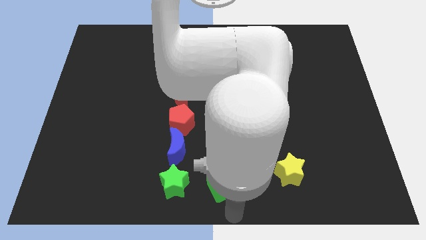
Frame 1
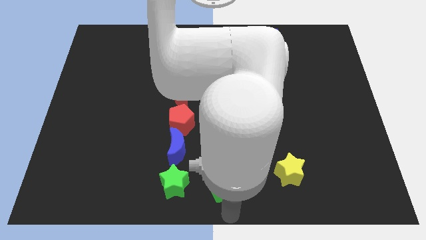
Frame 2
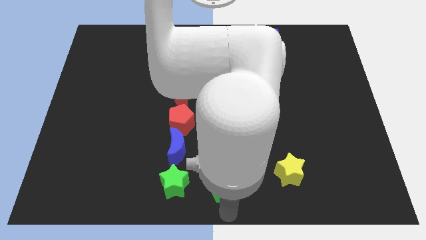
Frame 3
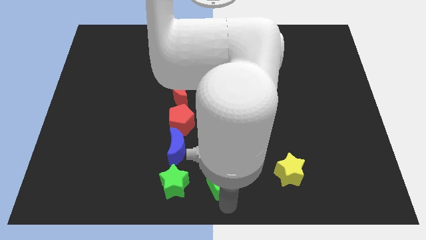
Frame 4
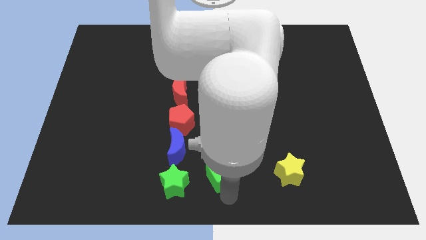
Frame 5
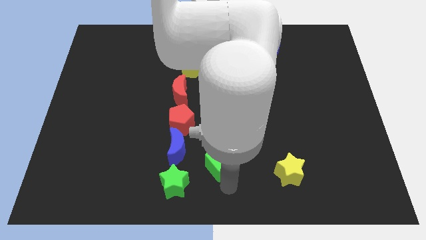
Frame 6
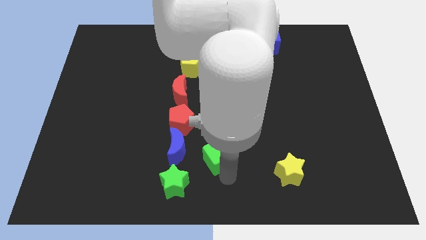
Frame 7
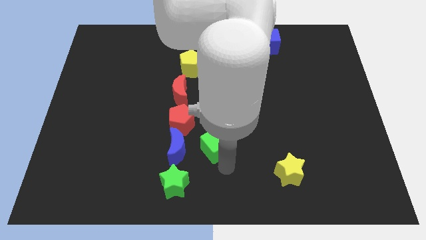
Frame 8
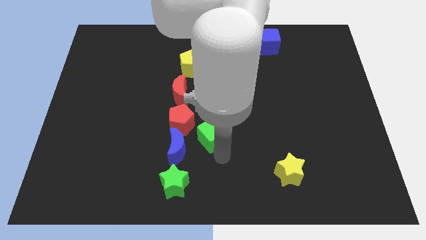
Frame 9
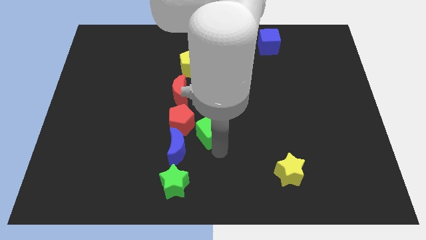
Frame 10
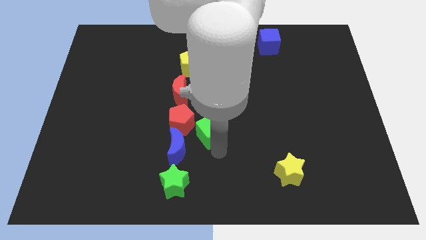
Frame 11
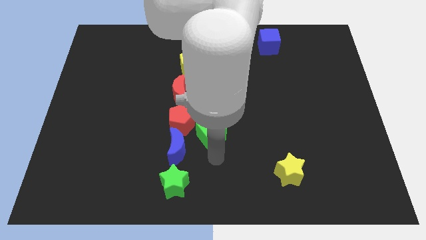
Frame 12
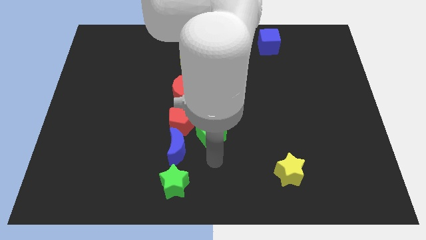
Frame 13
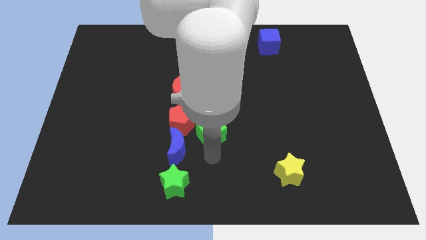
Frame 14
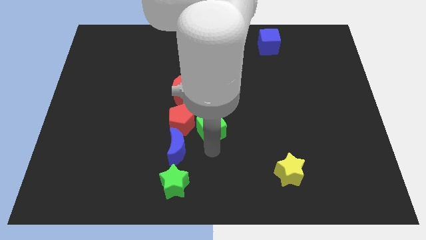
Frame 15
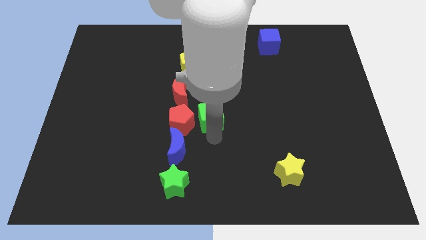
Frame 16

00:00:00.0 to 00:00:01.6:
push the green cube to the right side of the red pentagon

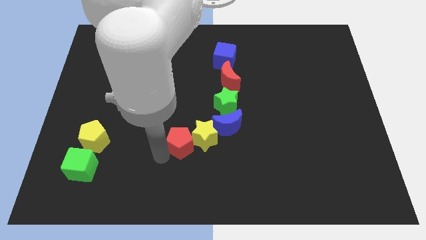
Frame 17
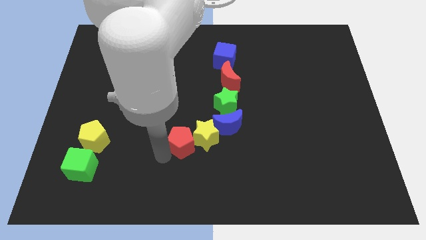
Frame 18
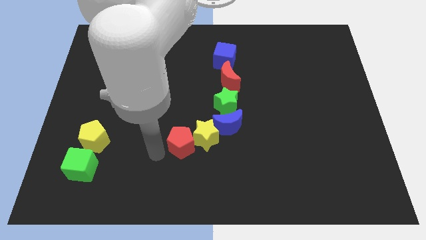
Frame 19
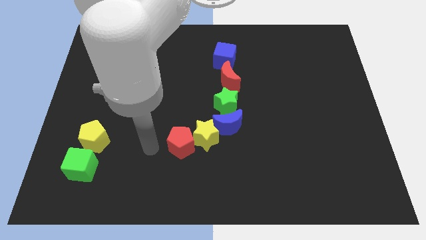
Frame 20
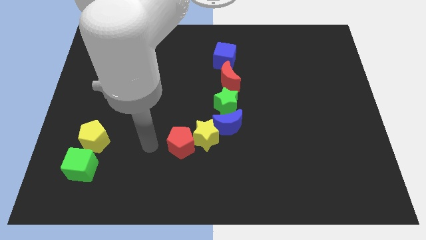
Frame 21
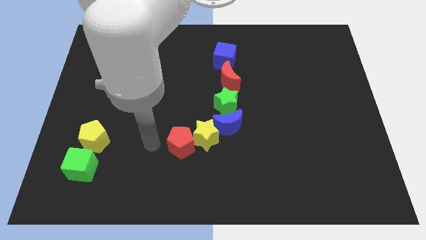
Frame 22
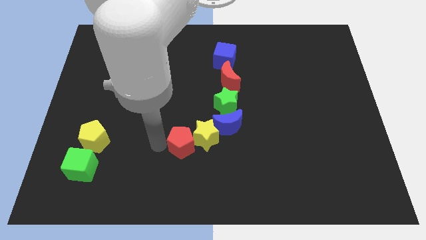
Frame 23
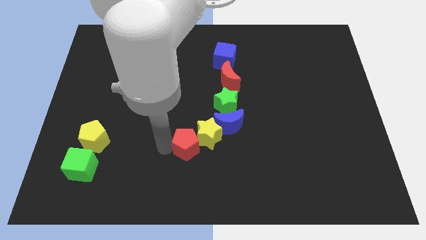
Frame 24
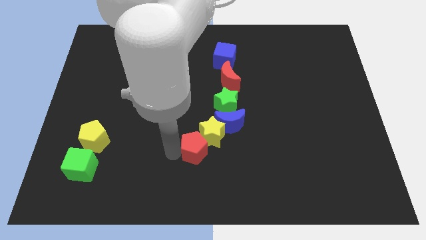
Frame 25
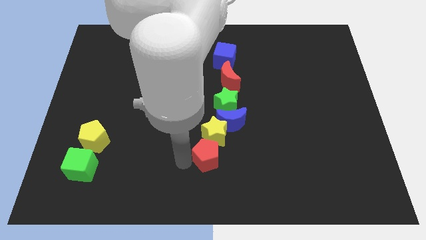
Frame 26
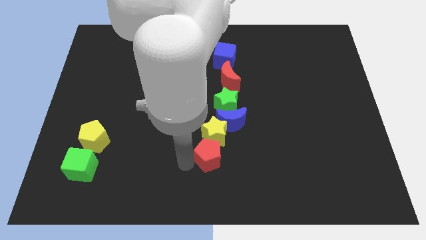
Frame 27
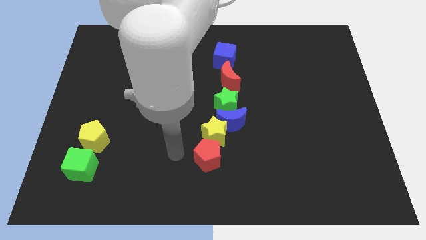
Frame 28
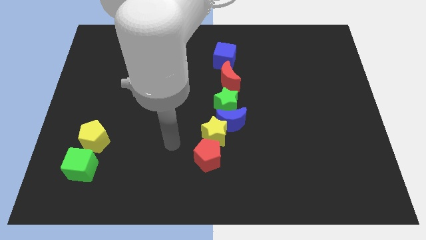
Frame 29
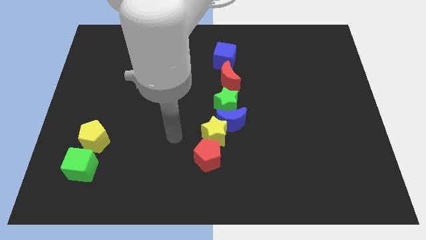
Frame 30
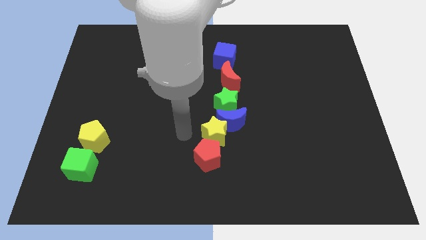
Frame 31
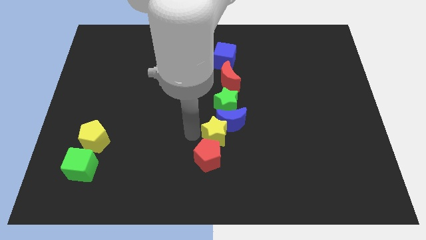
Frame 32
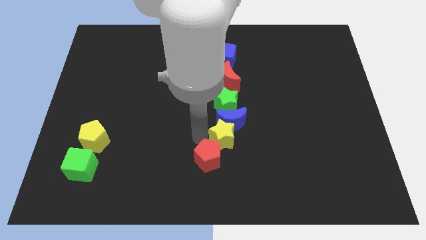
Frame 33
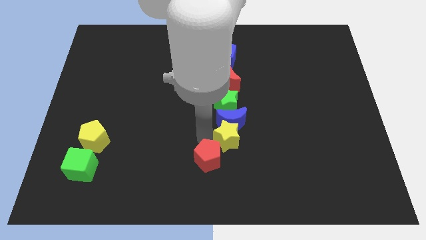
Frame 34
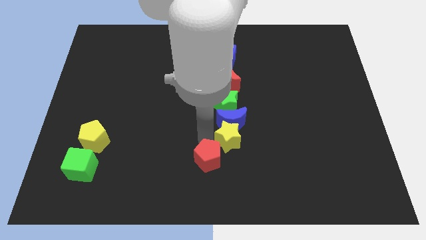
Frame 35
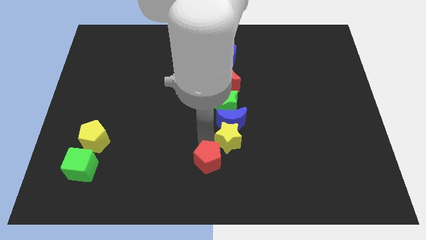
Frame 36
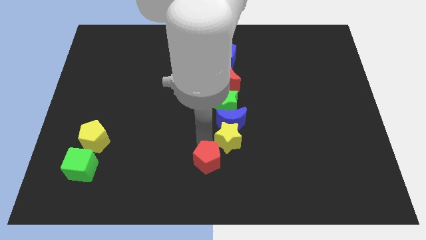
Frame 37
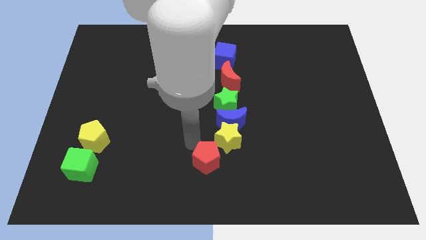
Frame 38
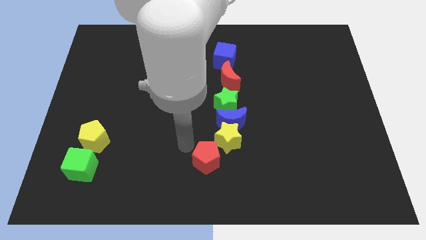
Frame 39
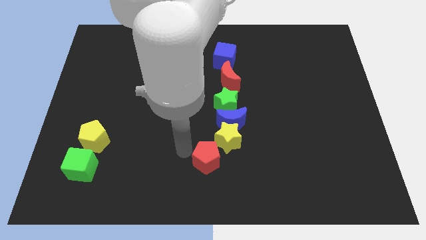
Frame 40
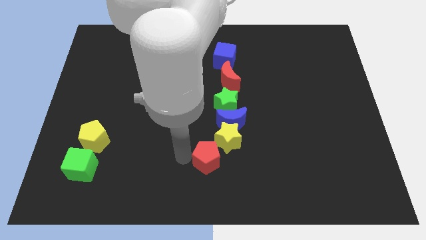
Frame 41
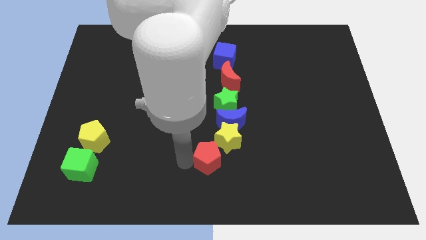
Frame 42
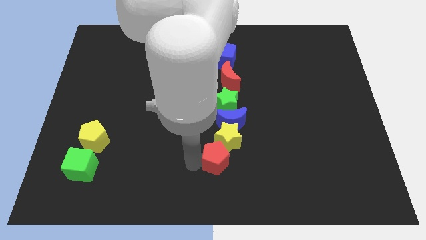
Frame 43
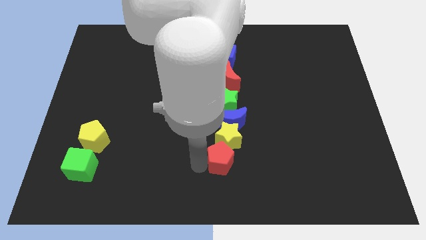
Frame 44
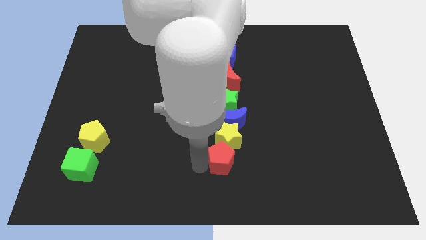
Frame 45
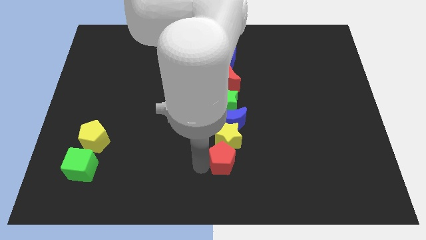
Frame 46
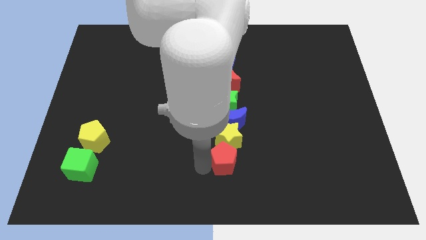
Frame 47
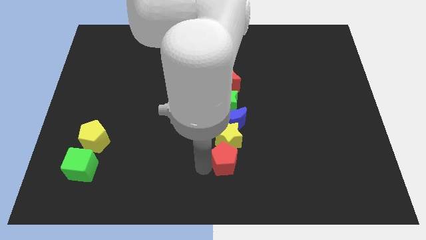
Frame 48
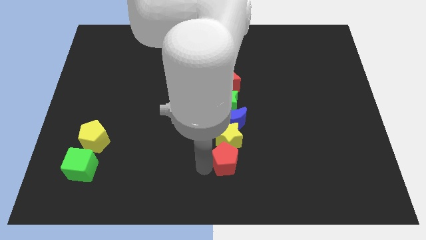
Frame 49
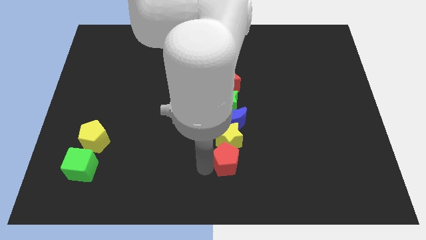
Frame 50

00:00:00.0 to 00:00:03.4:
adjust the red pentagon and yellow star to form a line

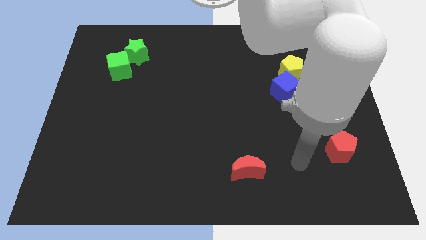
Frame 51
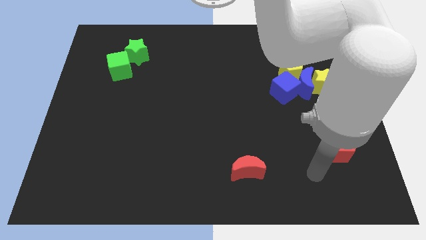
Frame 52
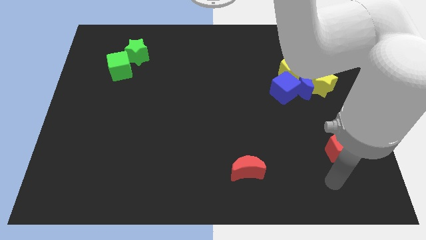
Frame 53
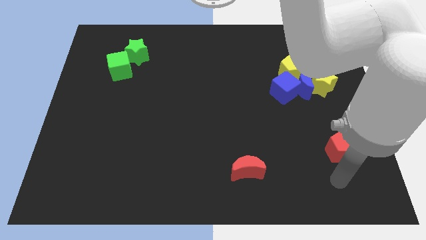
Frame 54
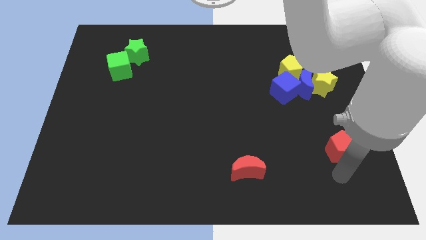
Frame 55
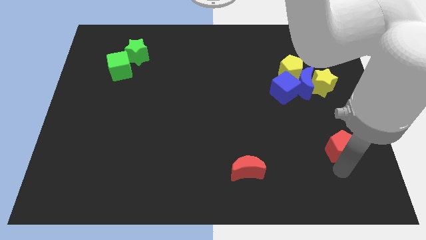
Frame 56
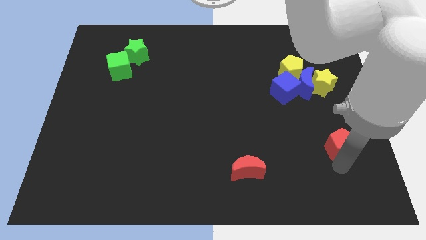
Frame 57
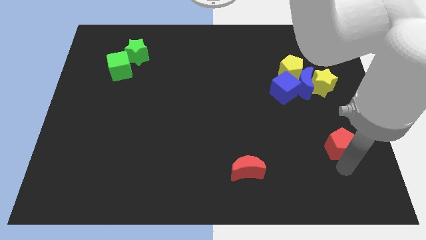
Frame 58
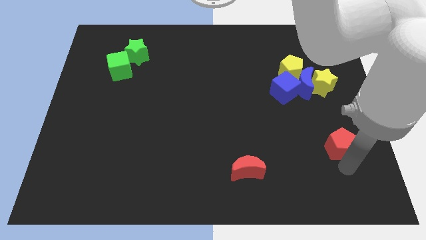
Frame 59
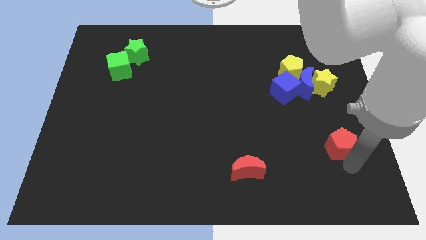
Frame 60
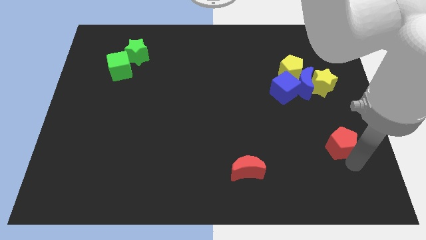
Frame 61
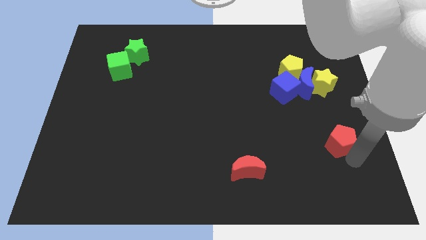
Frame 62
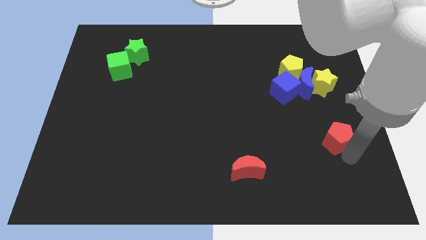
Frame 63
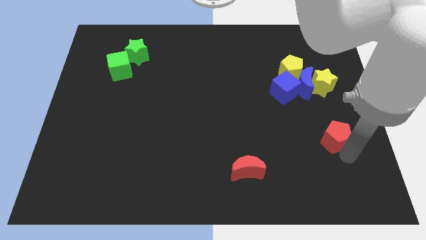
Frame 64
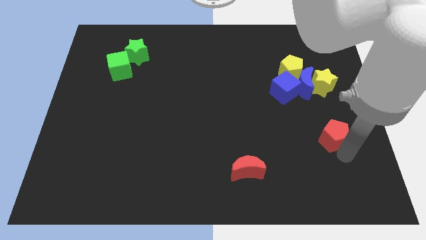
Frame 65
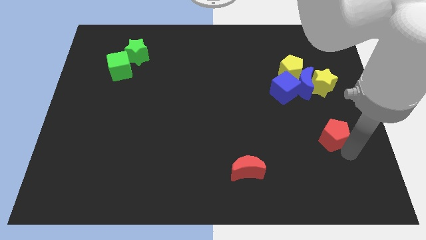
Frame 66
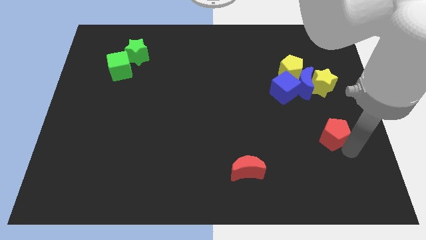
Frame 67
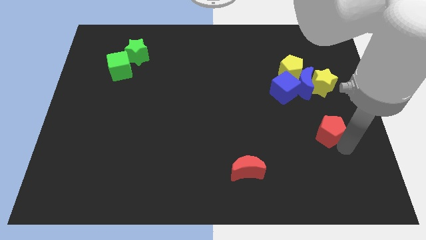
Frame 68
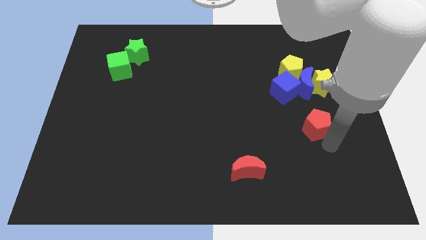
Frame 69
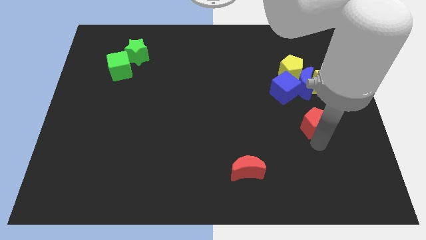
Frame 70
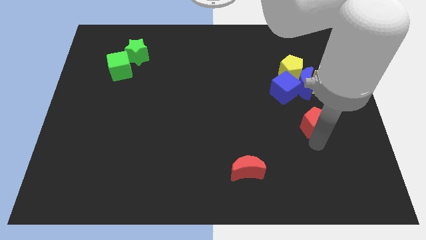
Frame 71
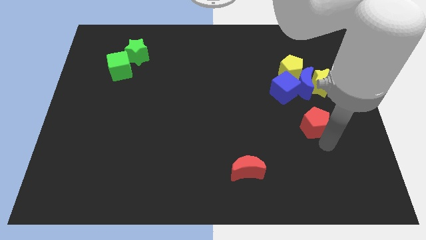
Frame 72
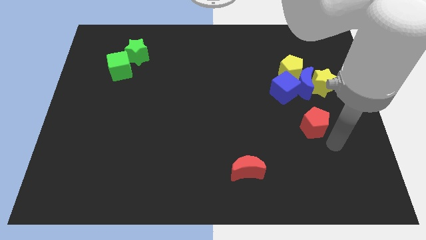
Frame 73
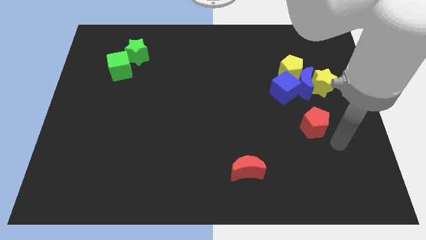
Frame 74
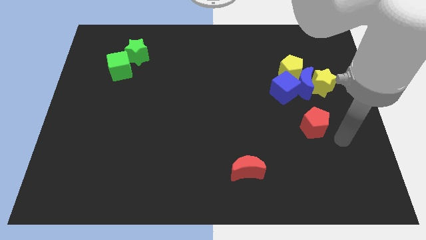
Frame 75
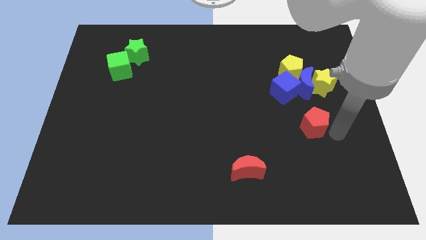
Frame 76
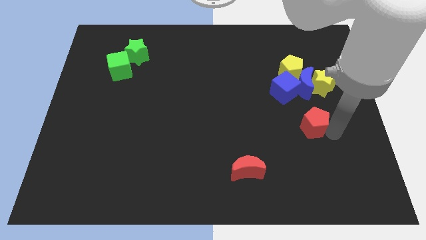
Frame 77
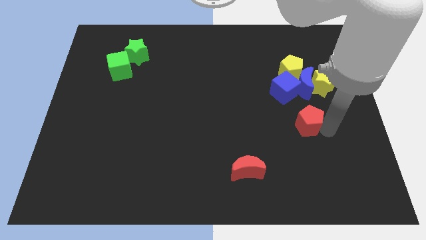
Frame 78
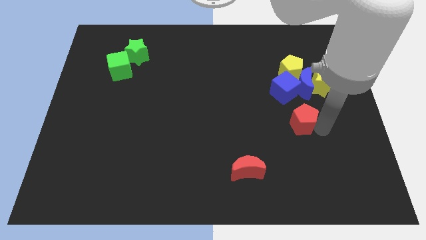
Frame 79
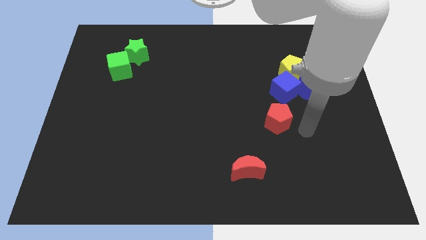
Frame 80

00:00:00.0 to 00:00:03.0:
move the red pentagon to the bottom of the blue cube

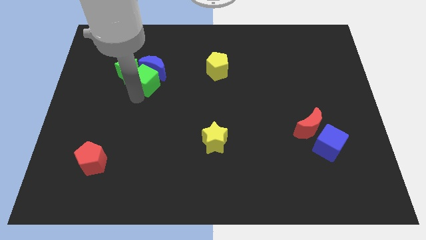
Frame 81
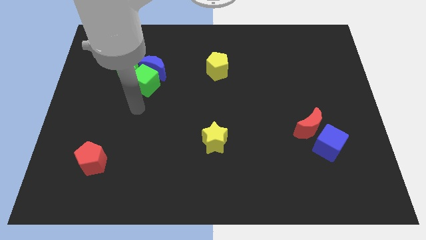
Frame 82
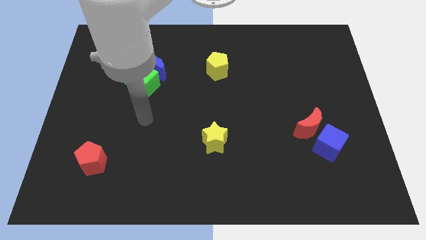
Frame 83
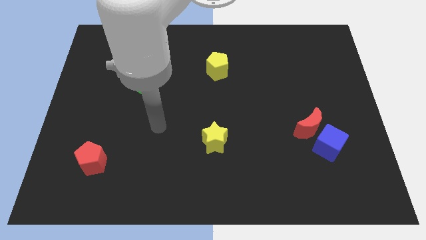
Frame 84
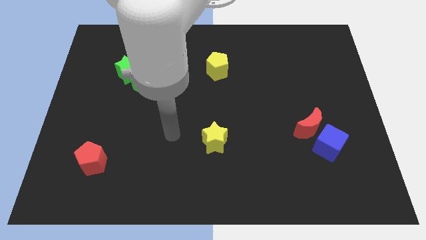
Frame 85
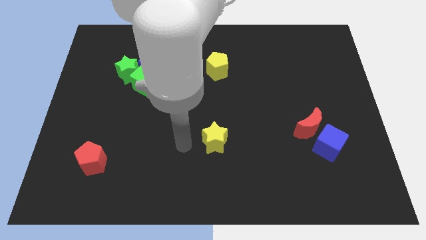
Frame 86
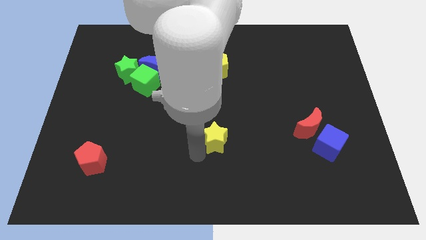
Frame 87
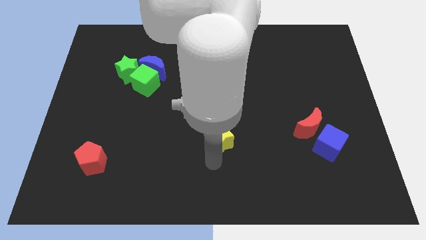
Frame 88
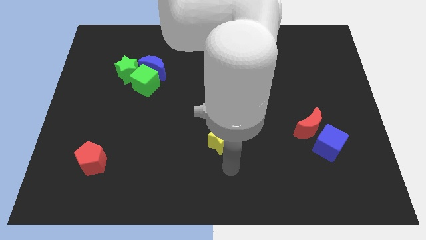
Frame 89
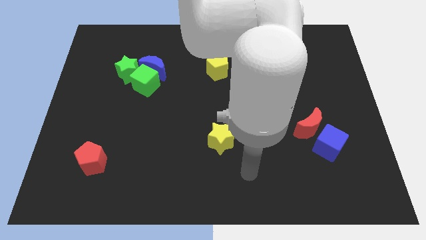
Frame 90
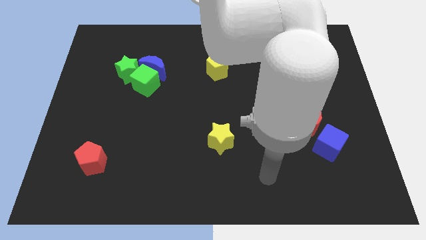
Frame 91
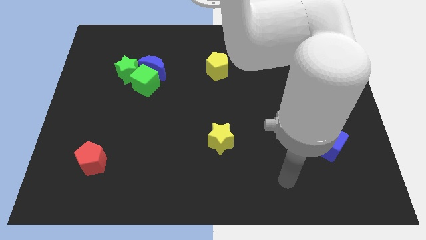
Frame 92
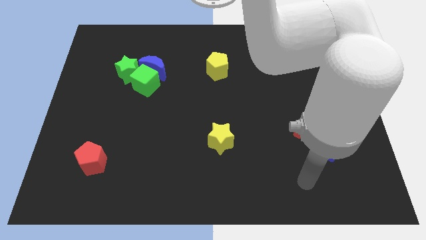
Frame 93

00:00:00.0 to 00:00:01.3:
move the arm away from the green cube
